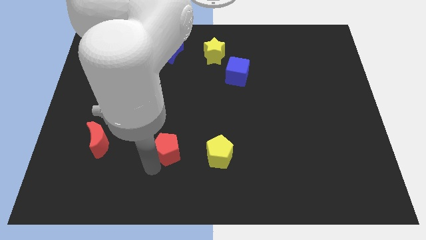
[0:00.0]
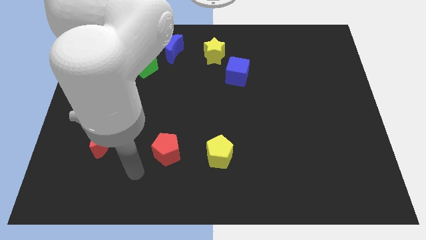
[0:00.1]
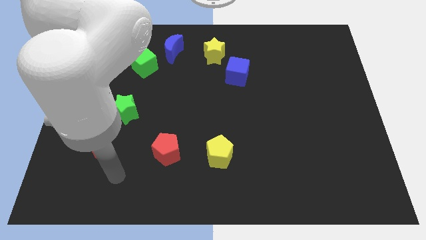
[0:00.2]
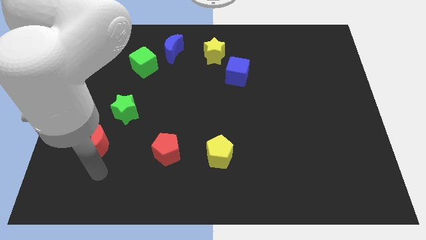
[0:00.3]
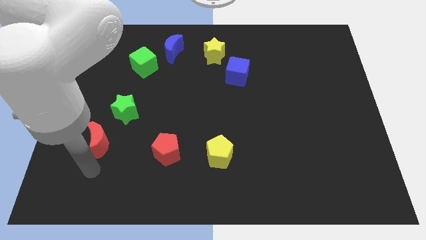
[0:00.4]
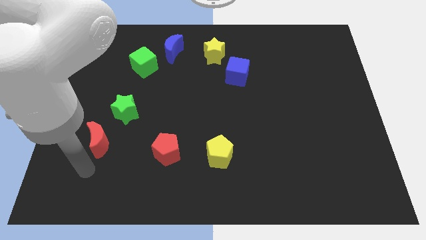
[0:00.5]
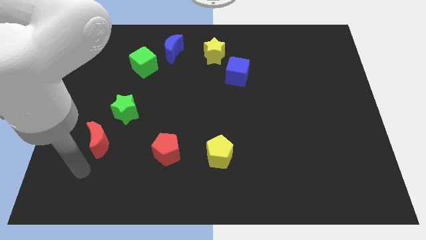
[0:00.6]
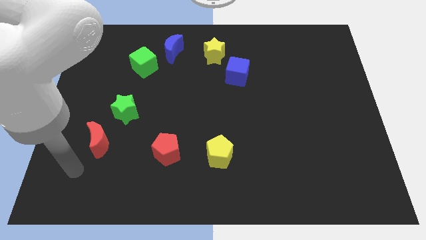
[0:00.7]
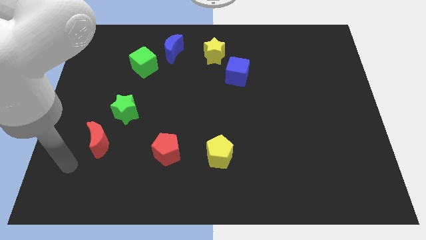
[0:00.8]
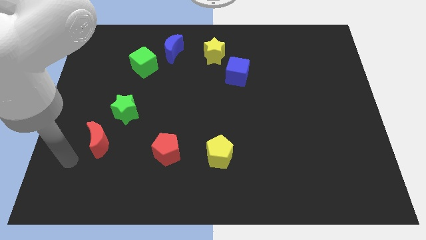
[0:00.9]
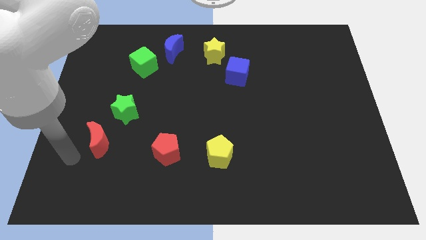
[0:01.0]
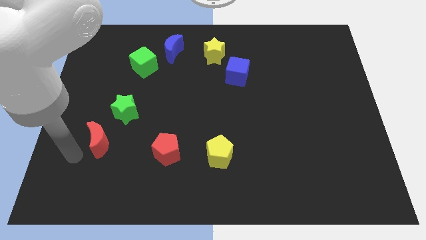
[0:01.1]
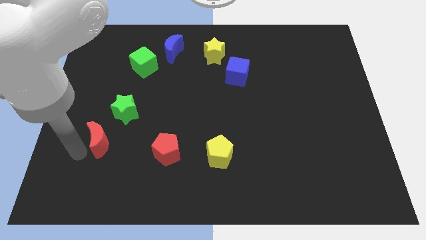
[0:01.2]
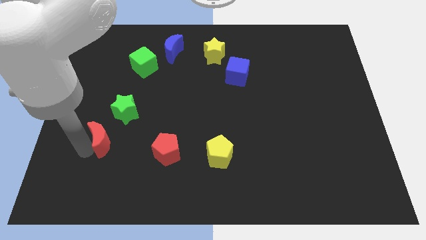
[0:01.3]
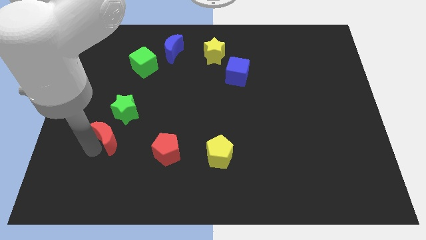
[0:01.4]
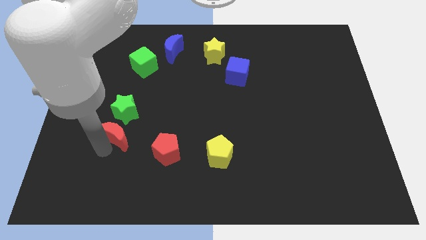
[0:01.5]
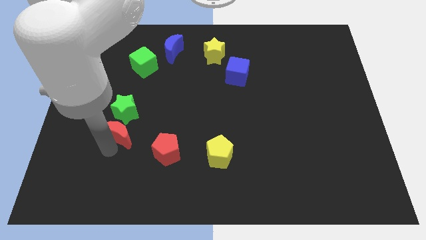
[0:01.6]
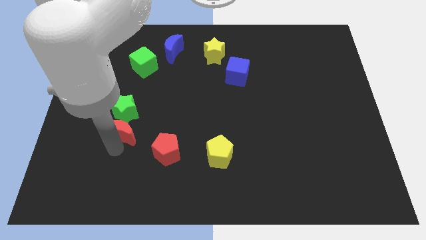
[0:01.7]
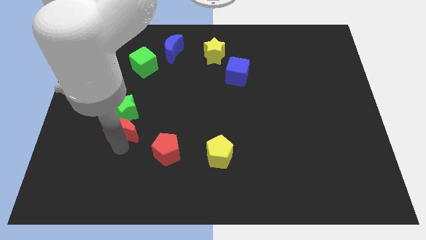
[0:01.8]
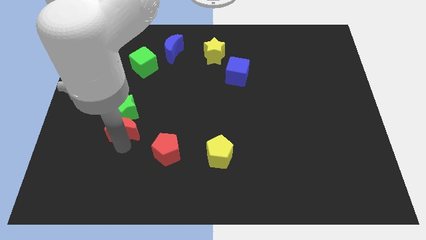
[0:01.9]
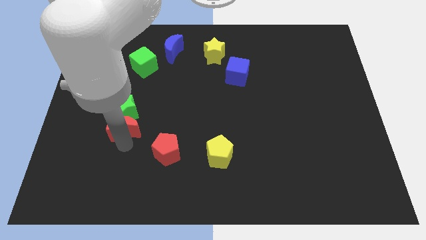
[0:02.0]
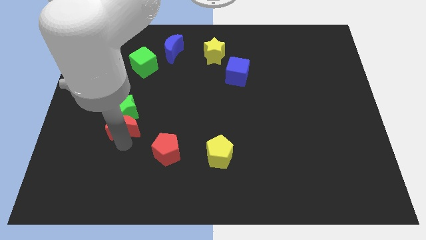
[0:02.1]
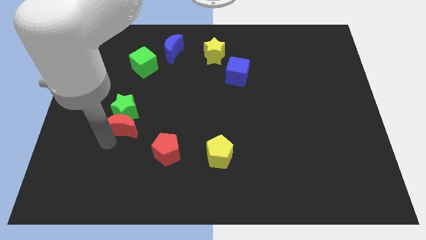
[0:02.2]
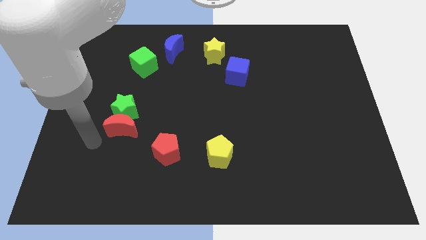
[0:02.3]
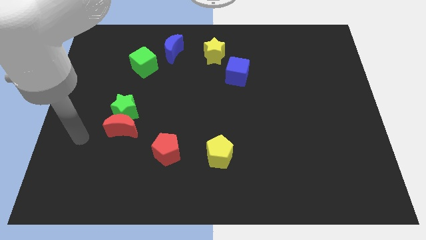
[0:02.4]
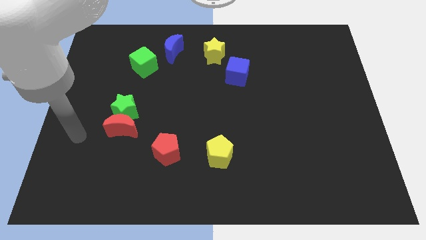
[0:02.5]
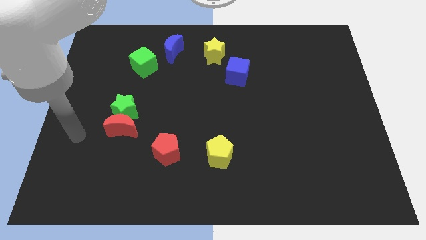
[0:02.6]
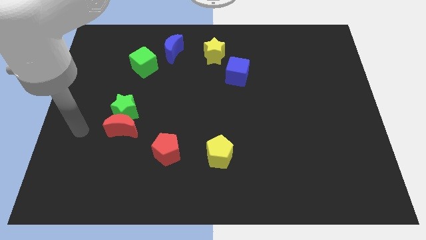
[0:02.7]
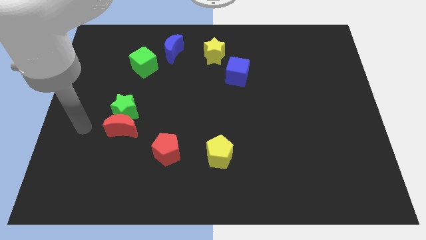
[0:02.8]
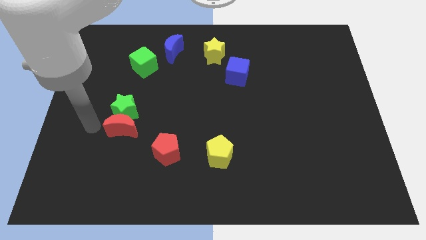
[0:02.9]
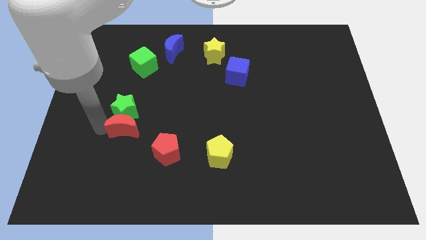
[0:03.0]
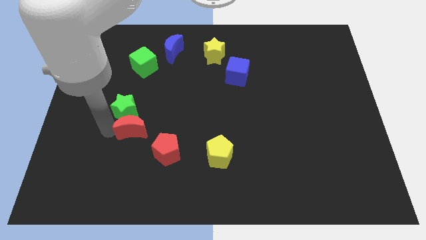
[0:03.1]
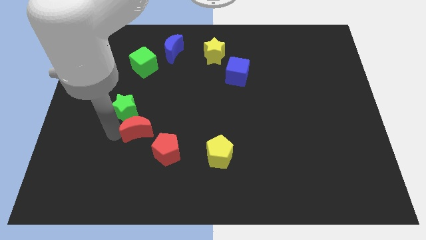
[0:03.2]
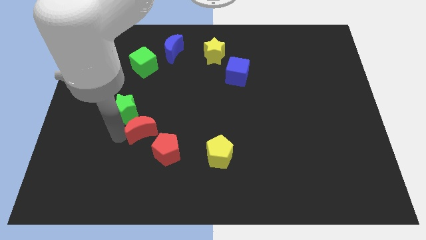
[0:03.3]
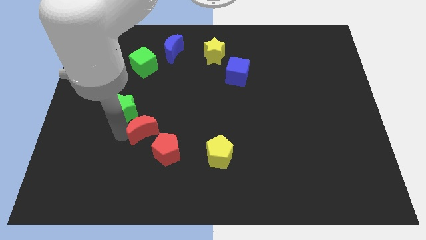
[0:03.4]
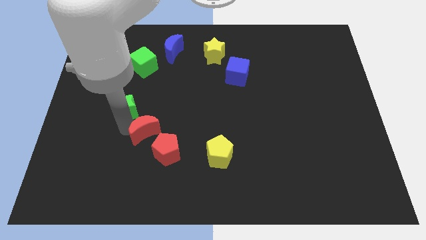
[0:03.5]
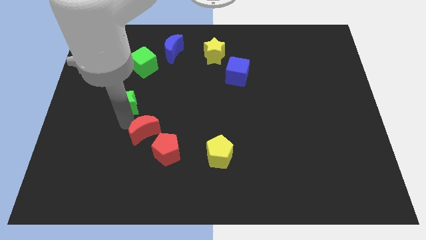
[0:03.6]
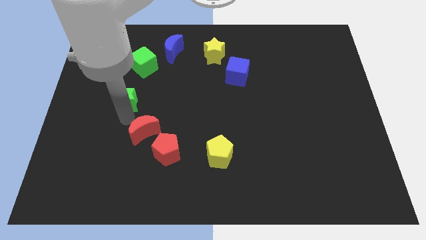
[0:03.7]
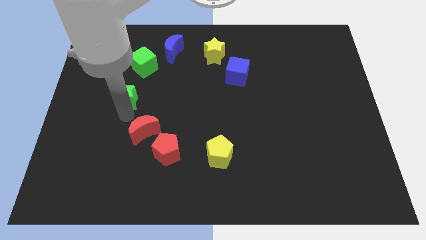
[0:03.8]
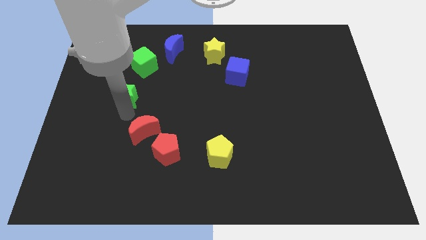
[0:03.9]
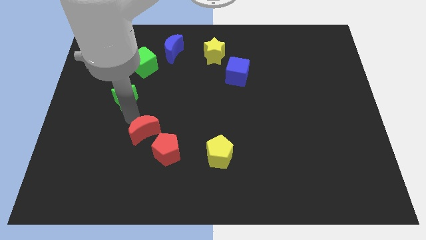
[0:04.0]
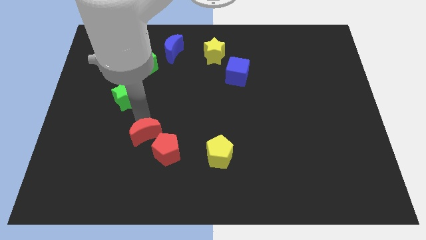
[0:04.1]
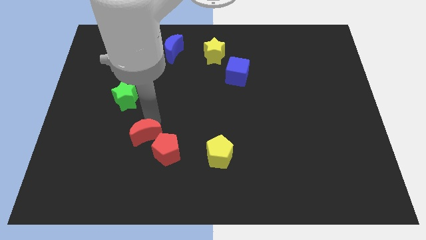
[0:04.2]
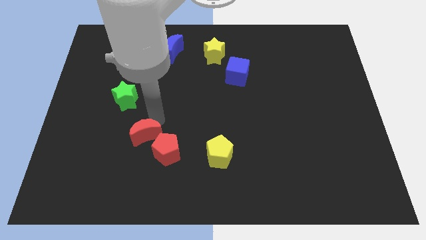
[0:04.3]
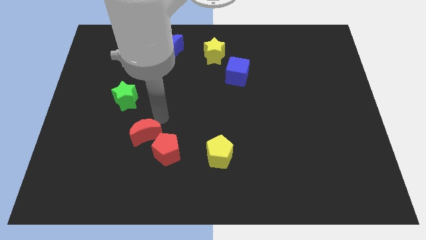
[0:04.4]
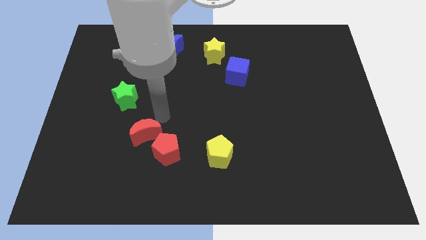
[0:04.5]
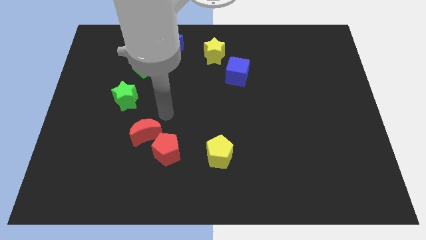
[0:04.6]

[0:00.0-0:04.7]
place red crescent to the top left of red pentagon

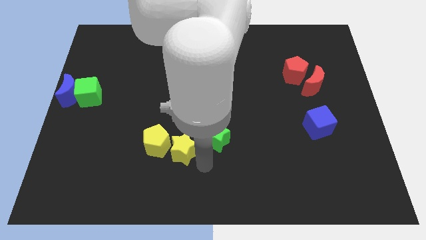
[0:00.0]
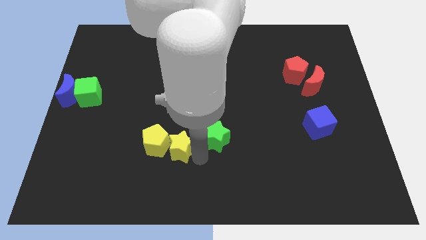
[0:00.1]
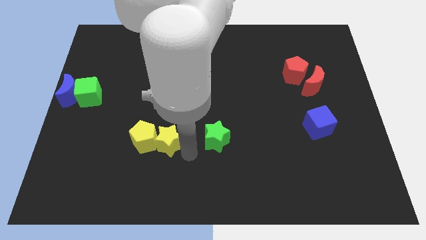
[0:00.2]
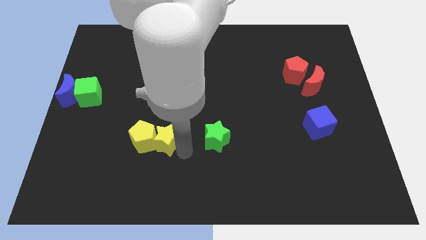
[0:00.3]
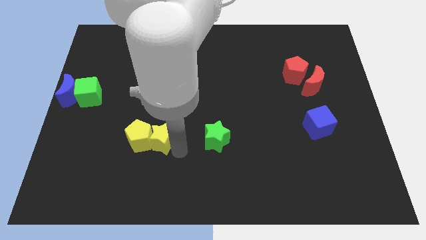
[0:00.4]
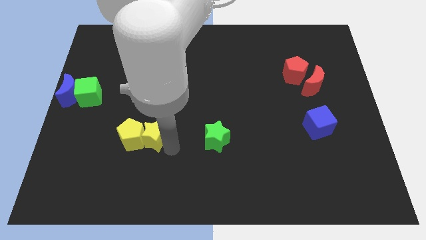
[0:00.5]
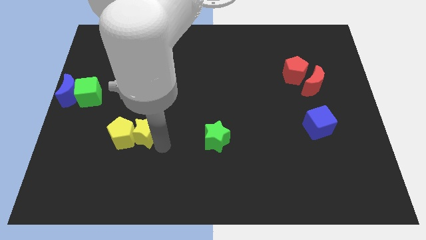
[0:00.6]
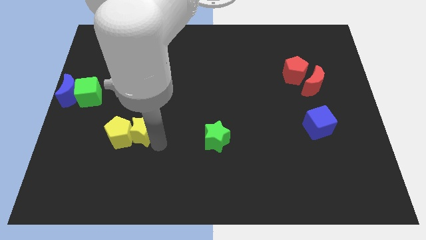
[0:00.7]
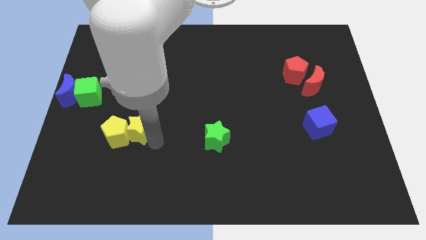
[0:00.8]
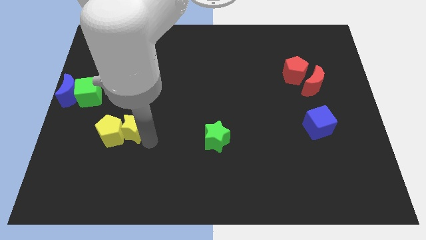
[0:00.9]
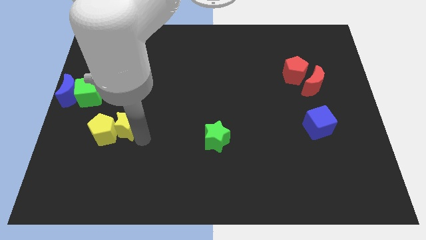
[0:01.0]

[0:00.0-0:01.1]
move the yellow pentagon with the yellow star towards the left center of the board

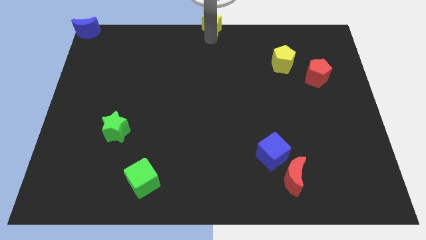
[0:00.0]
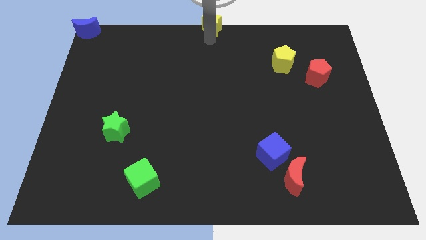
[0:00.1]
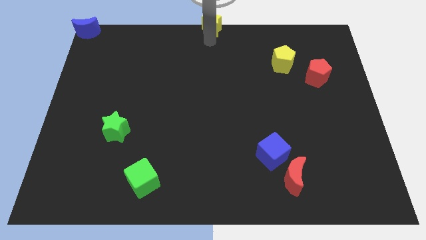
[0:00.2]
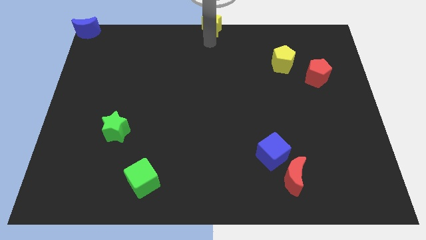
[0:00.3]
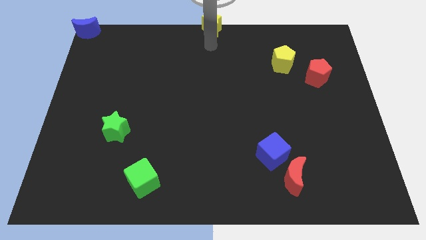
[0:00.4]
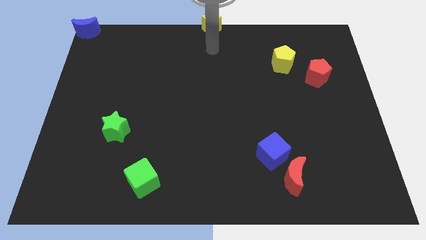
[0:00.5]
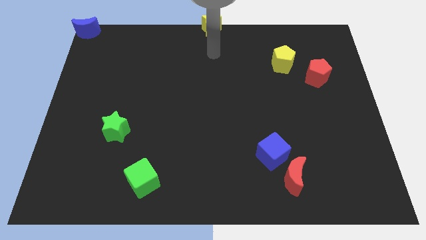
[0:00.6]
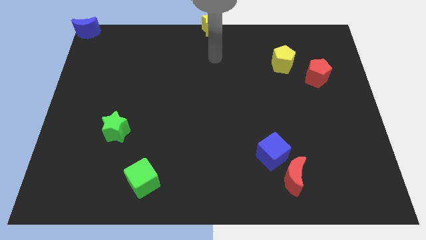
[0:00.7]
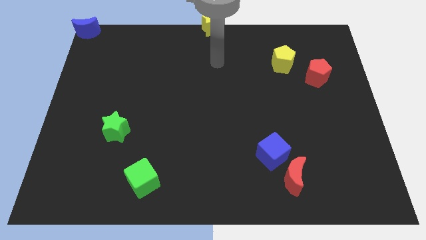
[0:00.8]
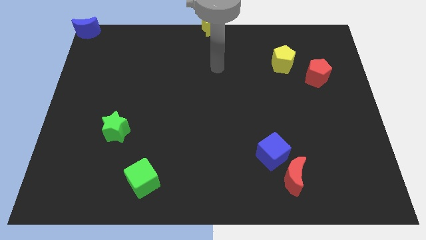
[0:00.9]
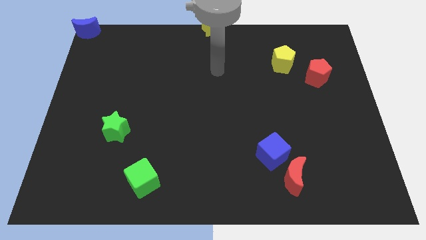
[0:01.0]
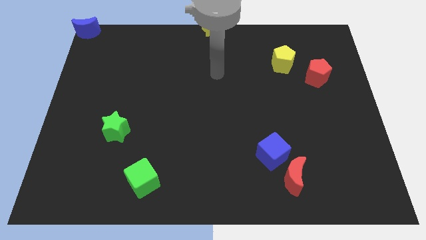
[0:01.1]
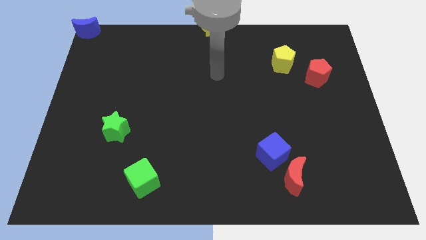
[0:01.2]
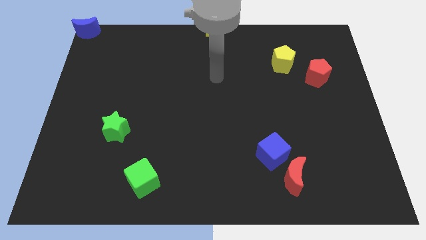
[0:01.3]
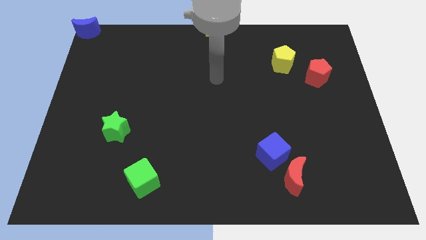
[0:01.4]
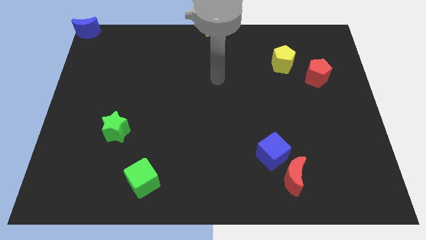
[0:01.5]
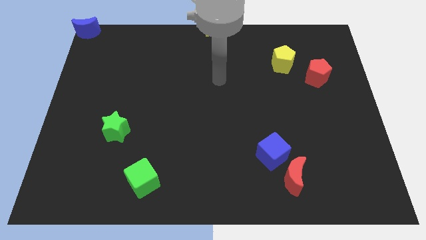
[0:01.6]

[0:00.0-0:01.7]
move your arm to the bottom side

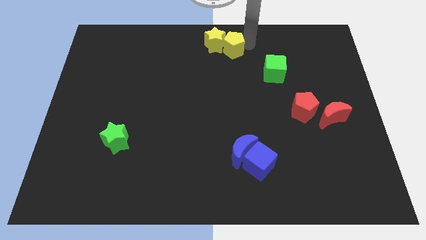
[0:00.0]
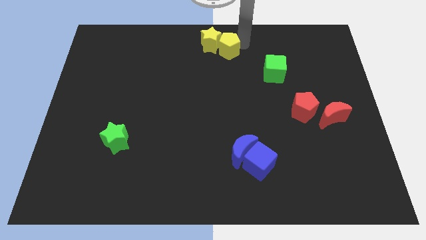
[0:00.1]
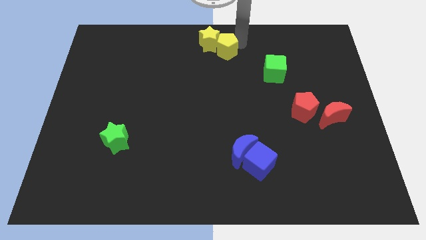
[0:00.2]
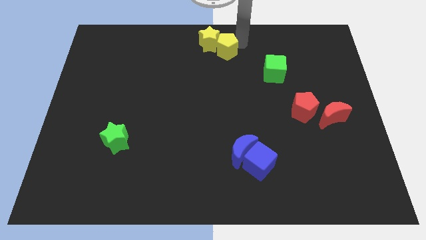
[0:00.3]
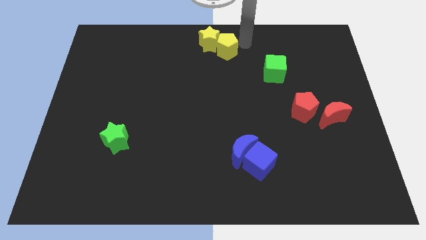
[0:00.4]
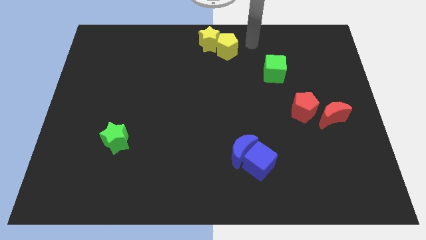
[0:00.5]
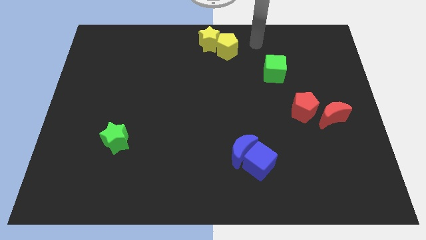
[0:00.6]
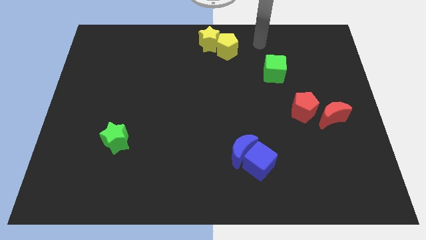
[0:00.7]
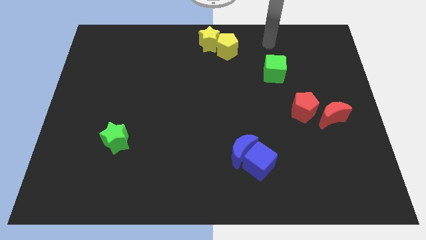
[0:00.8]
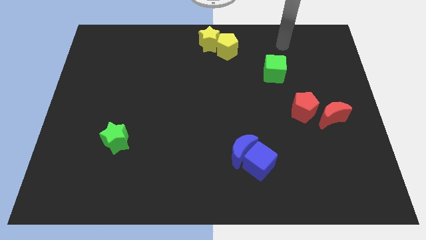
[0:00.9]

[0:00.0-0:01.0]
place your arm above the green cube

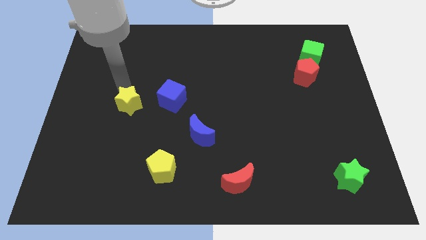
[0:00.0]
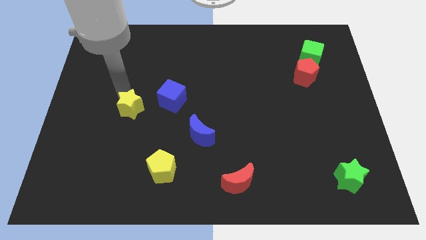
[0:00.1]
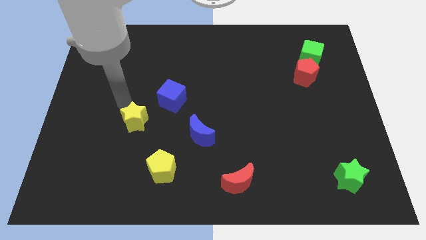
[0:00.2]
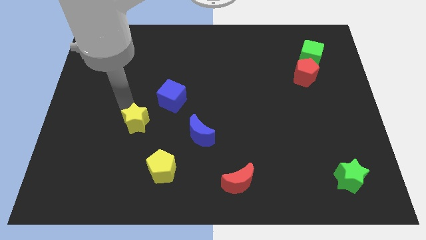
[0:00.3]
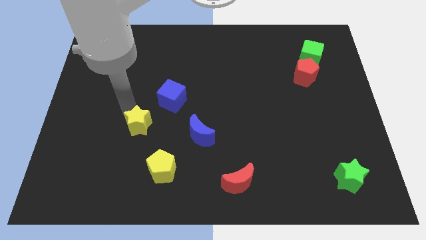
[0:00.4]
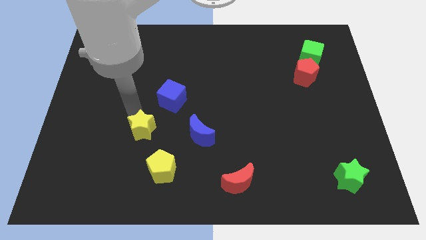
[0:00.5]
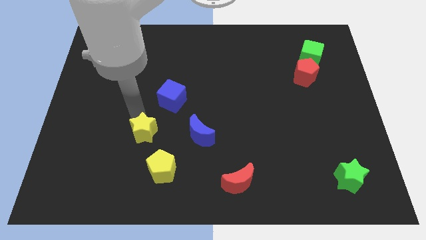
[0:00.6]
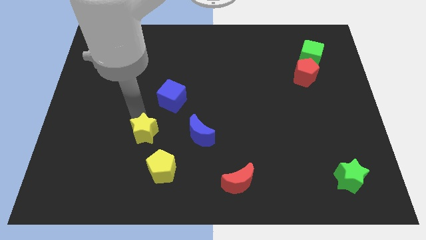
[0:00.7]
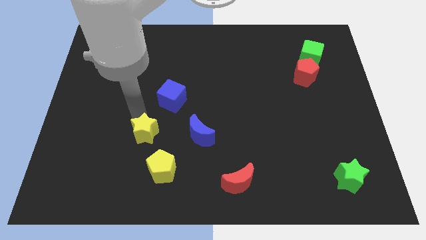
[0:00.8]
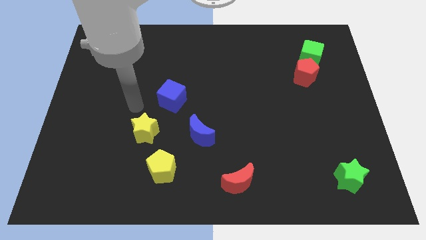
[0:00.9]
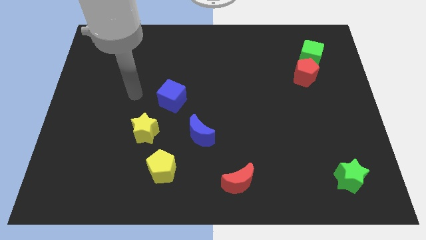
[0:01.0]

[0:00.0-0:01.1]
push the yellow star near to the yellow pentagon
